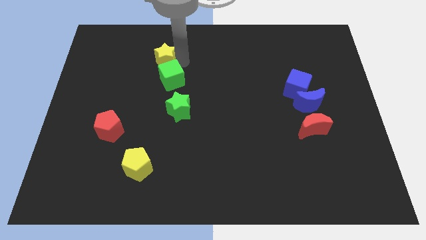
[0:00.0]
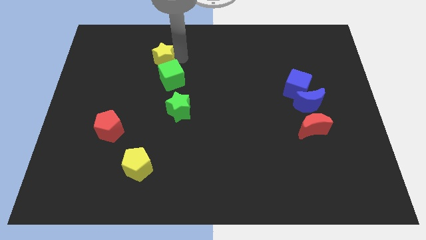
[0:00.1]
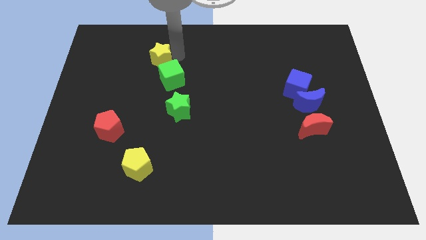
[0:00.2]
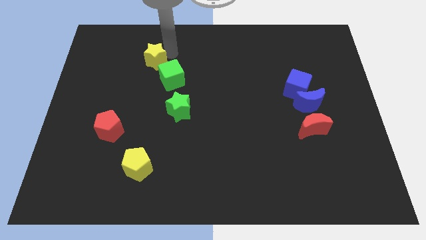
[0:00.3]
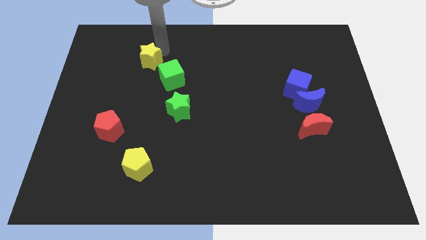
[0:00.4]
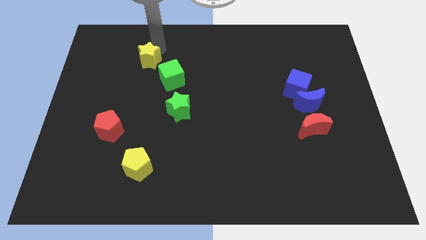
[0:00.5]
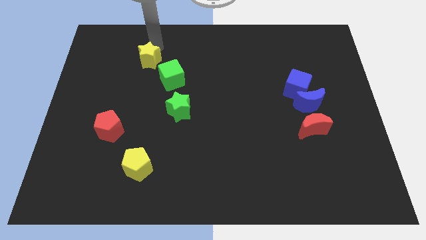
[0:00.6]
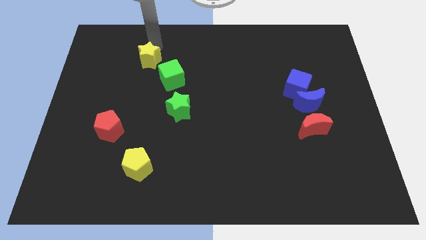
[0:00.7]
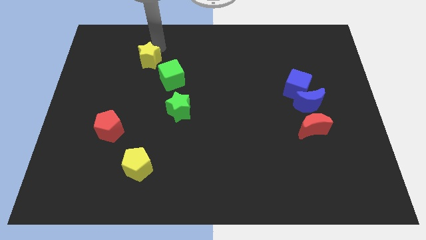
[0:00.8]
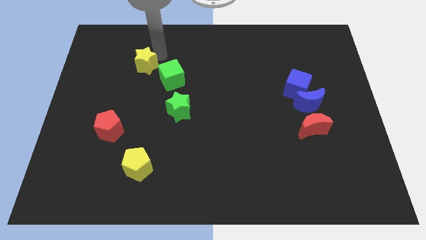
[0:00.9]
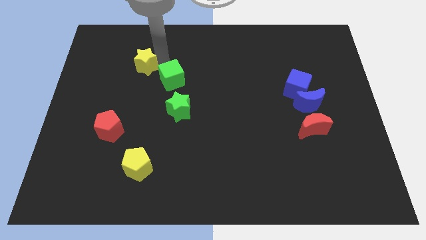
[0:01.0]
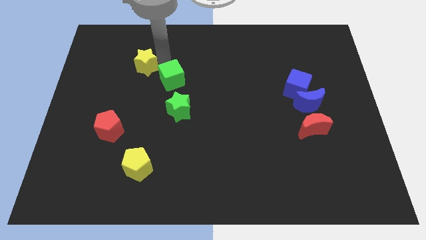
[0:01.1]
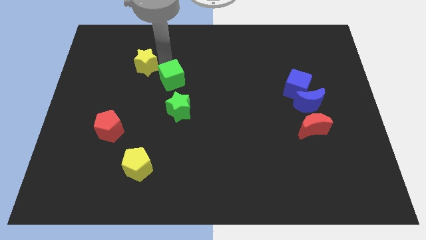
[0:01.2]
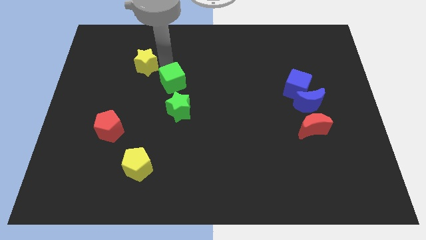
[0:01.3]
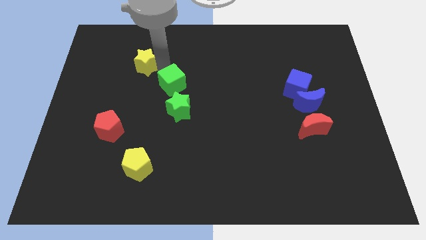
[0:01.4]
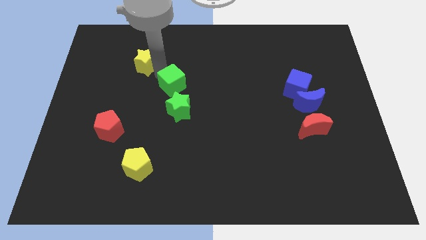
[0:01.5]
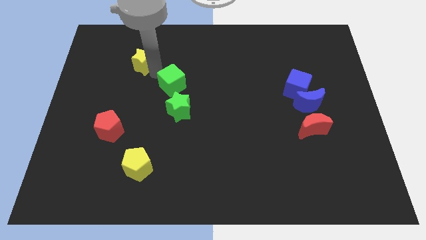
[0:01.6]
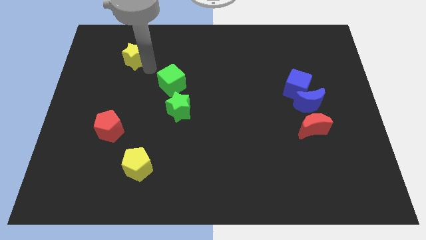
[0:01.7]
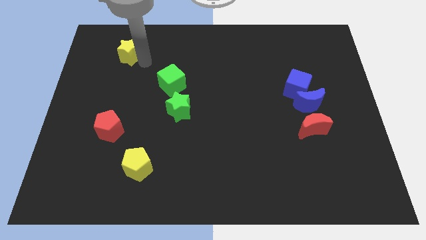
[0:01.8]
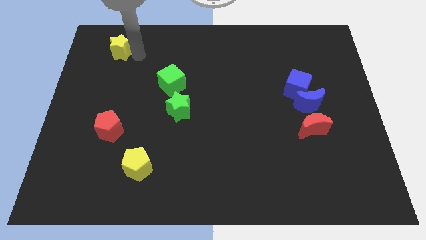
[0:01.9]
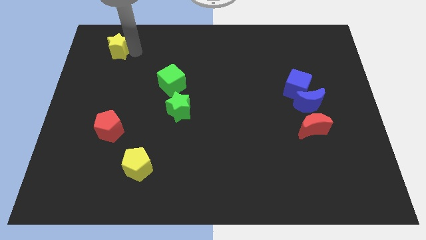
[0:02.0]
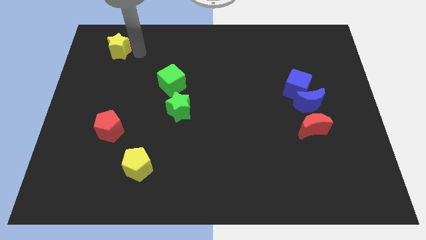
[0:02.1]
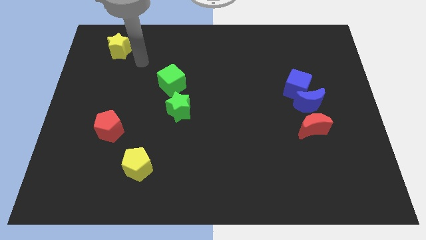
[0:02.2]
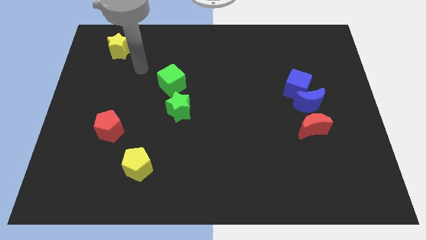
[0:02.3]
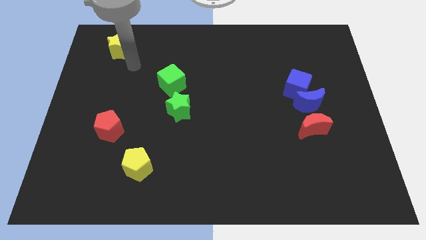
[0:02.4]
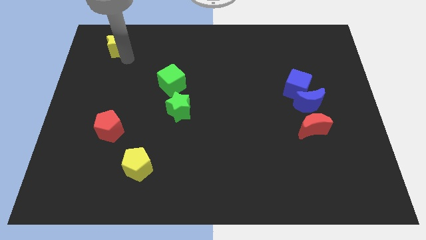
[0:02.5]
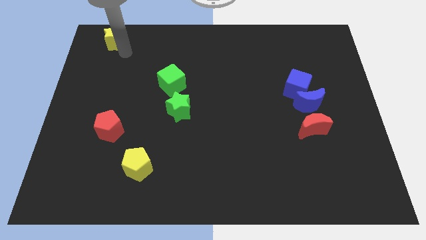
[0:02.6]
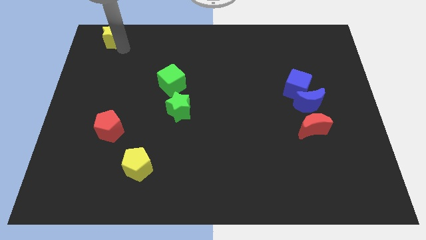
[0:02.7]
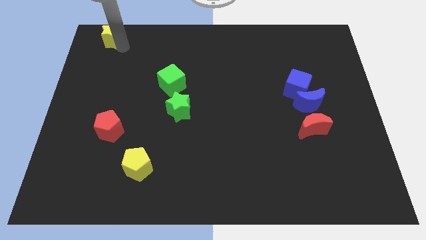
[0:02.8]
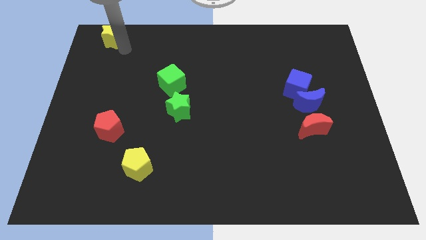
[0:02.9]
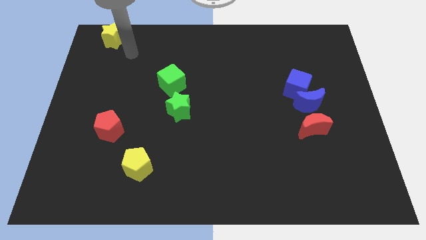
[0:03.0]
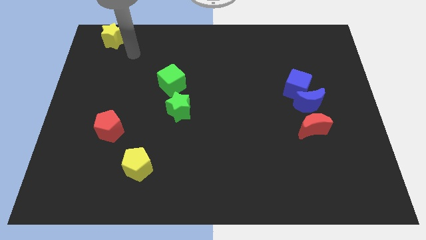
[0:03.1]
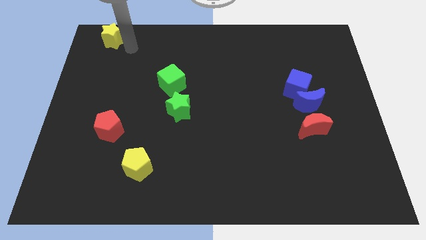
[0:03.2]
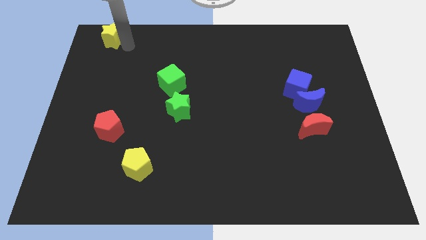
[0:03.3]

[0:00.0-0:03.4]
move the yellow star towards the top left side of the board

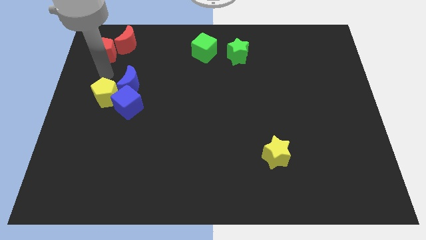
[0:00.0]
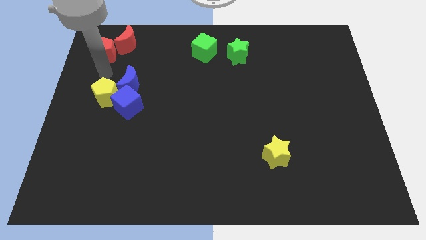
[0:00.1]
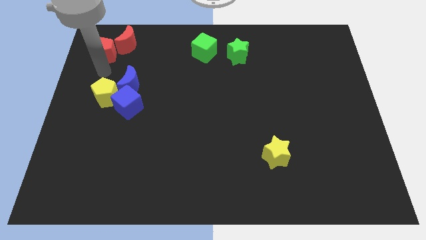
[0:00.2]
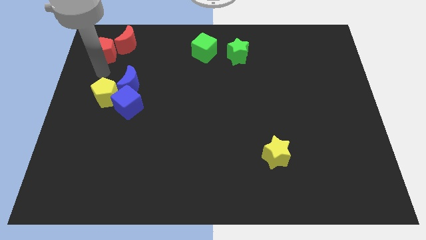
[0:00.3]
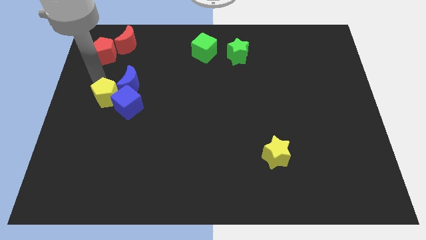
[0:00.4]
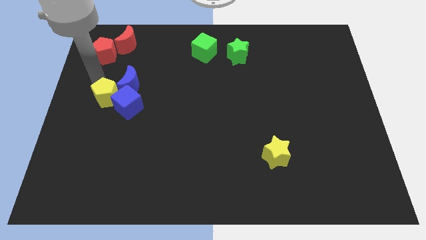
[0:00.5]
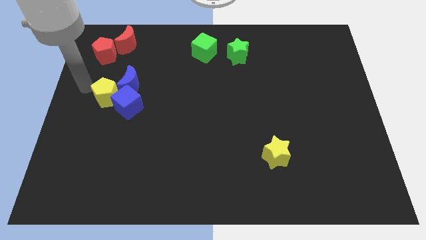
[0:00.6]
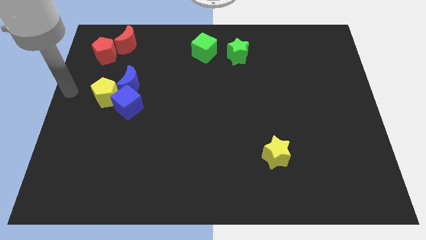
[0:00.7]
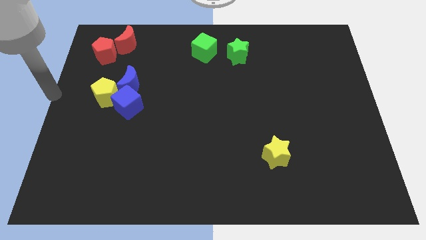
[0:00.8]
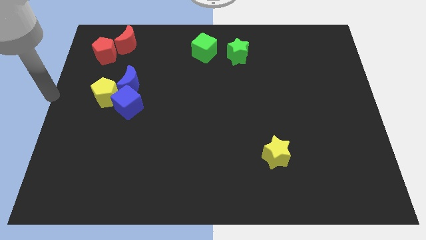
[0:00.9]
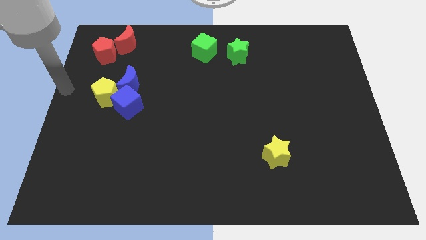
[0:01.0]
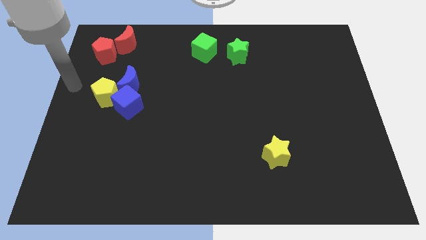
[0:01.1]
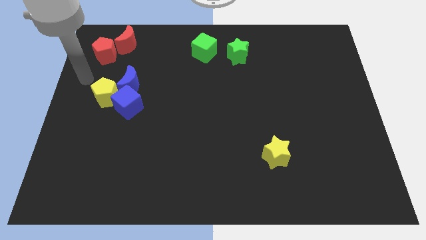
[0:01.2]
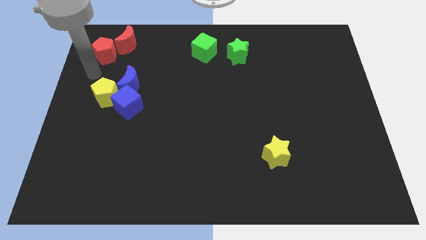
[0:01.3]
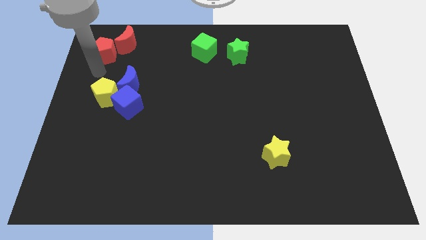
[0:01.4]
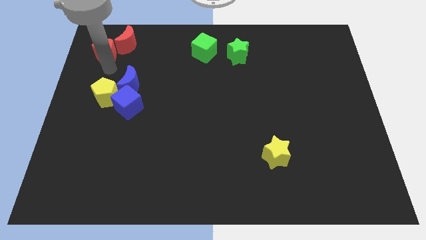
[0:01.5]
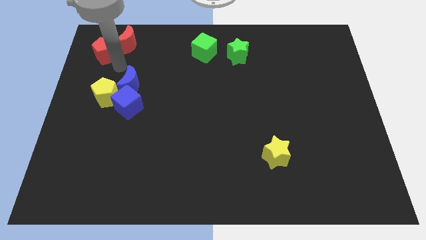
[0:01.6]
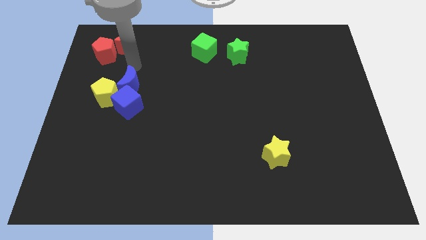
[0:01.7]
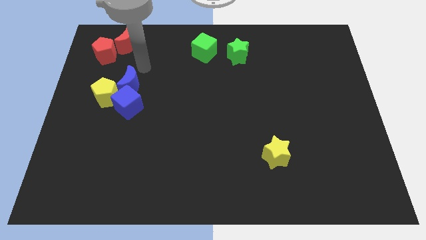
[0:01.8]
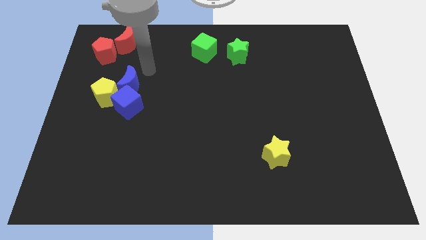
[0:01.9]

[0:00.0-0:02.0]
move your arm away from the red pentagon

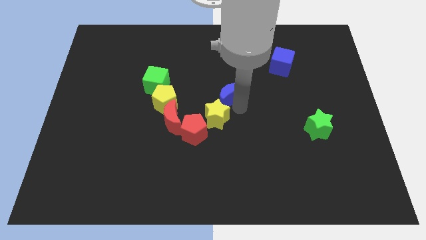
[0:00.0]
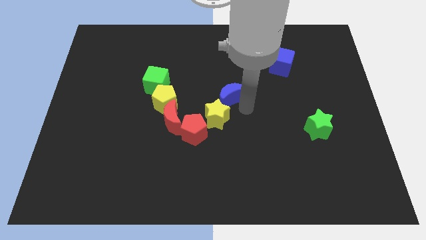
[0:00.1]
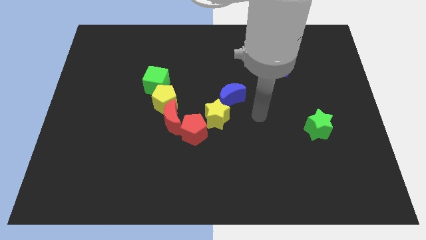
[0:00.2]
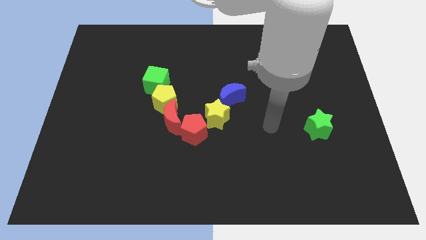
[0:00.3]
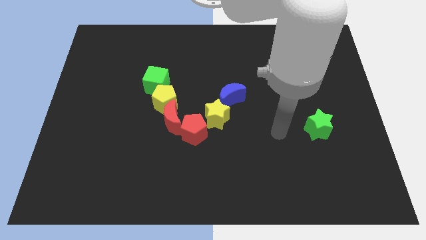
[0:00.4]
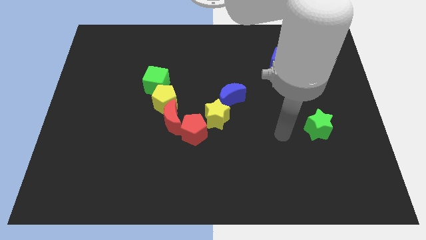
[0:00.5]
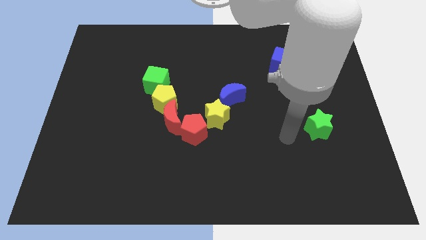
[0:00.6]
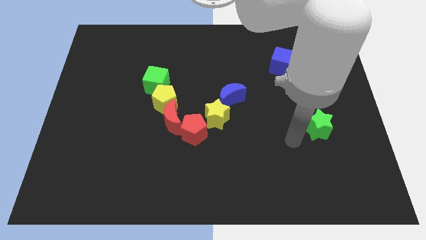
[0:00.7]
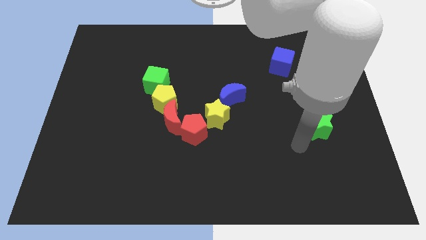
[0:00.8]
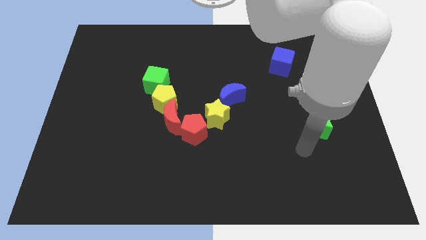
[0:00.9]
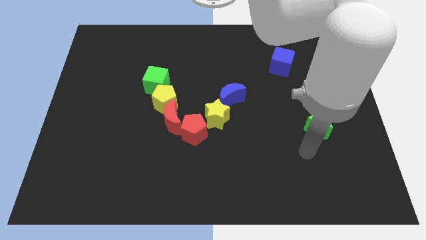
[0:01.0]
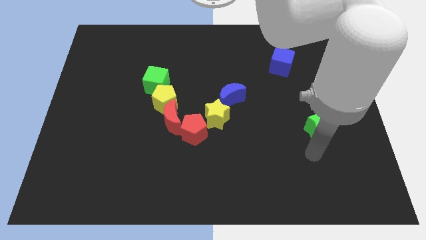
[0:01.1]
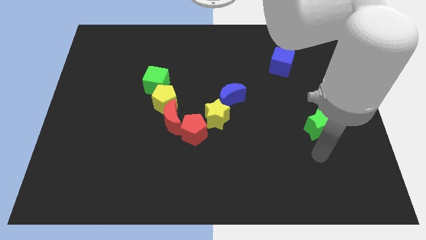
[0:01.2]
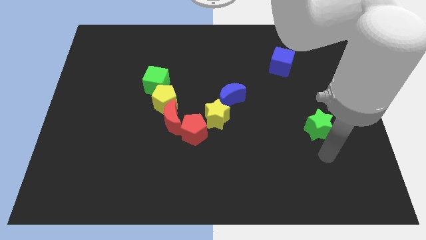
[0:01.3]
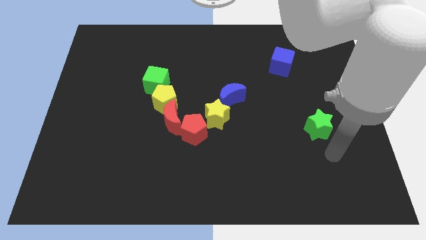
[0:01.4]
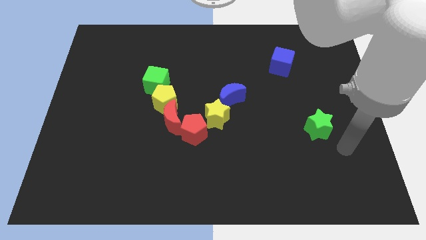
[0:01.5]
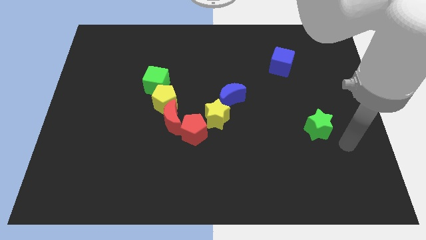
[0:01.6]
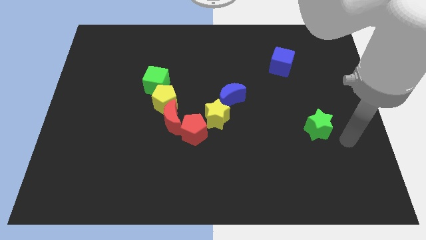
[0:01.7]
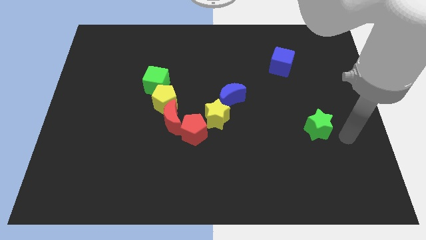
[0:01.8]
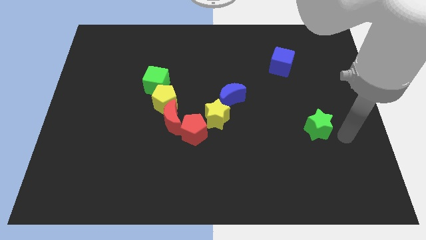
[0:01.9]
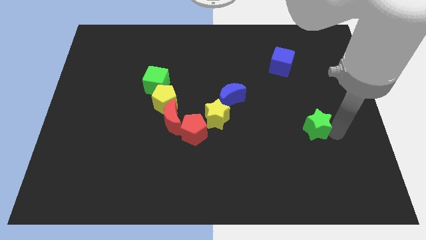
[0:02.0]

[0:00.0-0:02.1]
move your arm towards the green star

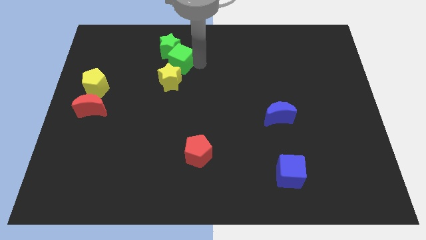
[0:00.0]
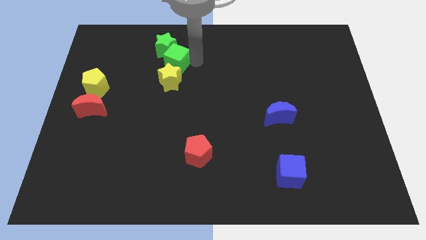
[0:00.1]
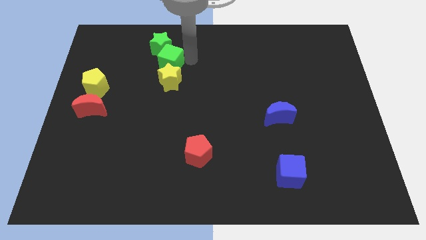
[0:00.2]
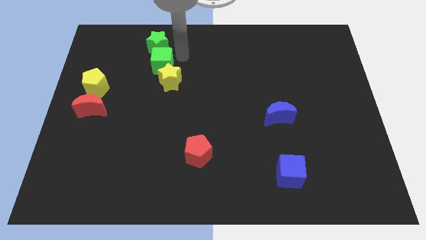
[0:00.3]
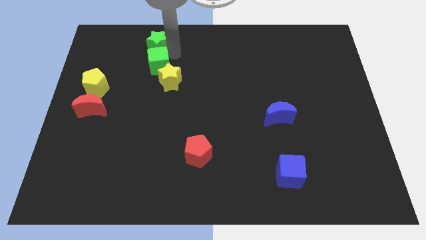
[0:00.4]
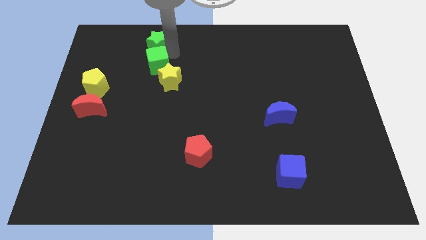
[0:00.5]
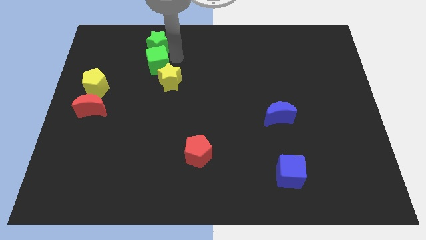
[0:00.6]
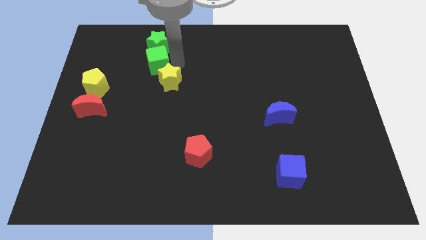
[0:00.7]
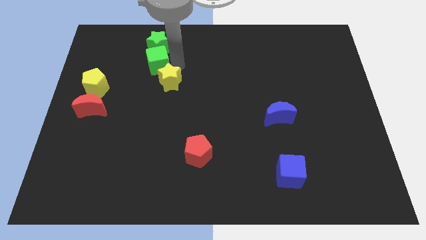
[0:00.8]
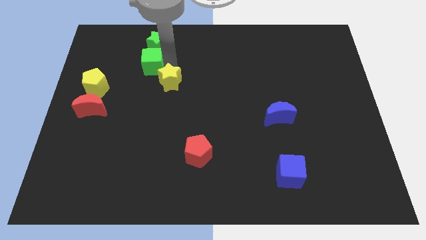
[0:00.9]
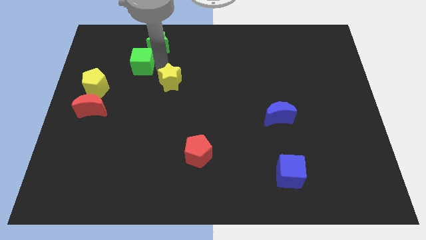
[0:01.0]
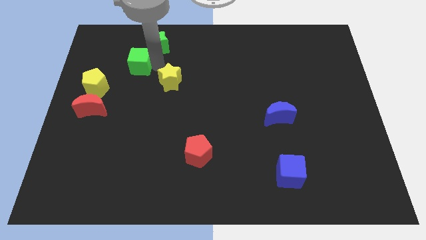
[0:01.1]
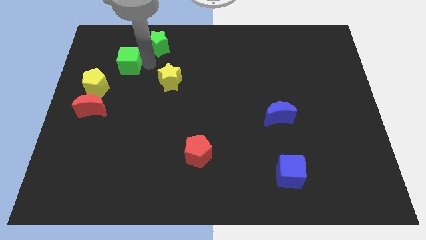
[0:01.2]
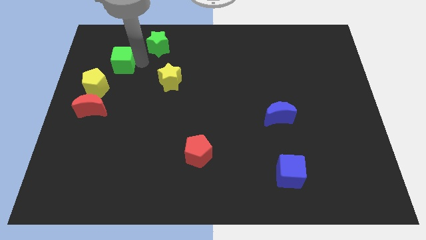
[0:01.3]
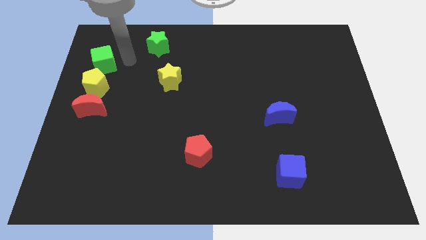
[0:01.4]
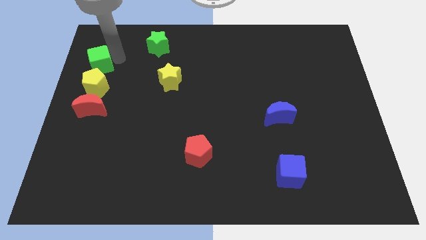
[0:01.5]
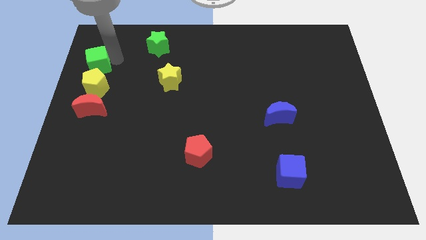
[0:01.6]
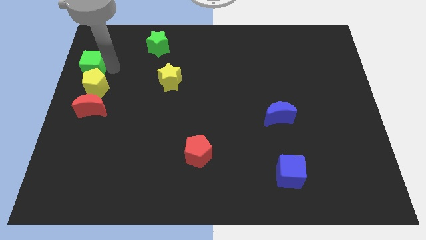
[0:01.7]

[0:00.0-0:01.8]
place the green cube above the yellow pentagon
